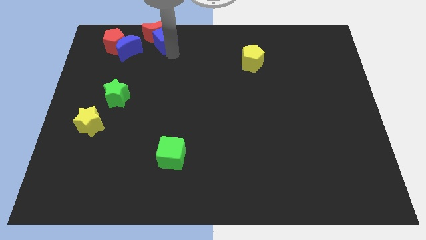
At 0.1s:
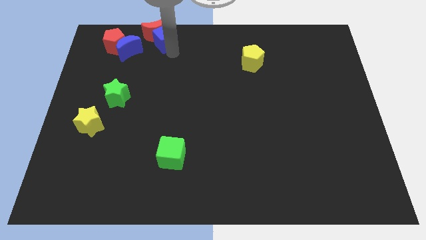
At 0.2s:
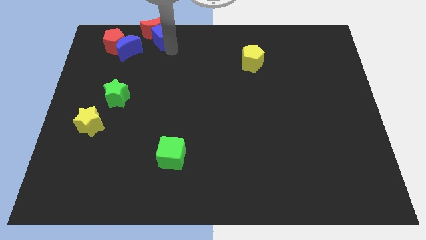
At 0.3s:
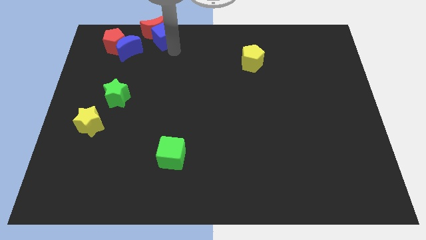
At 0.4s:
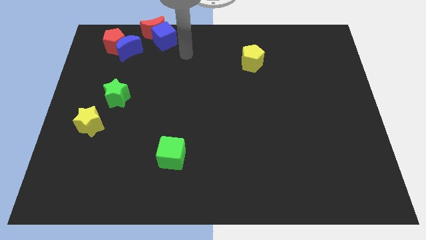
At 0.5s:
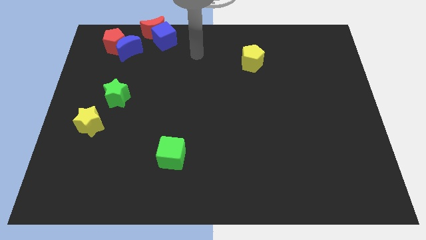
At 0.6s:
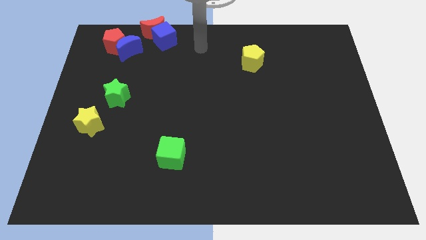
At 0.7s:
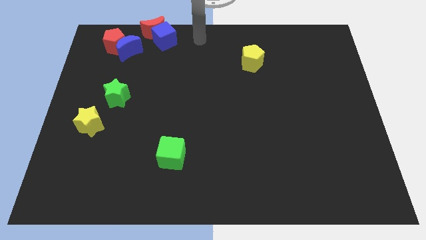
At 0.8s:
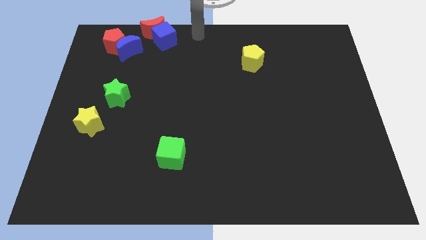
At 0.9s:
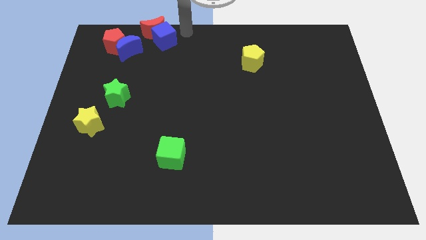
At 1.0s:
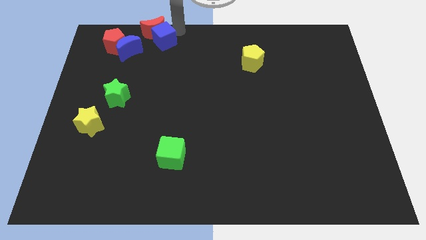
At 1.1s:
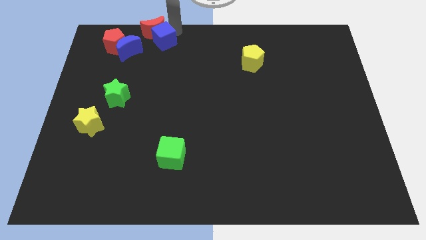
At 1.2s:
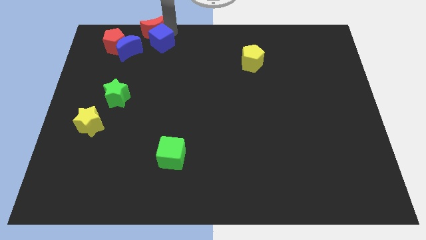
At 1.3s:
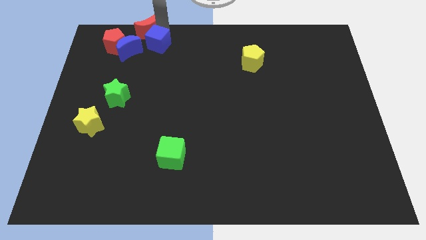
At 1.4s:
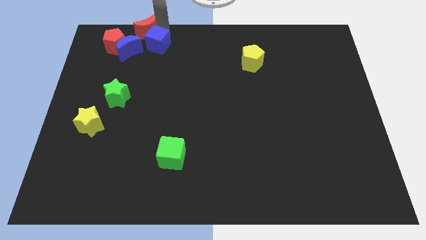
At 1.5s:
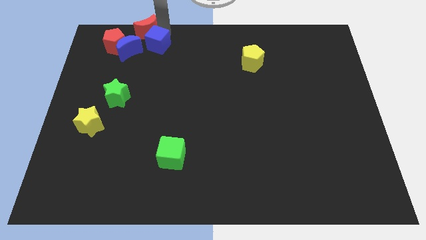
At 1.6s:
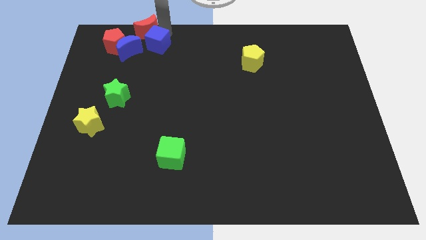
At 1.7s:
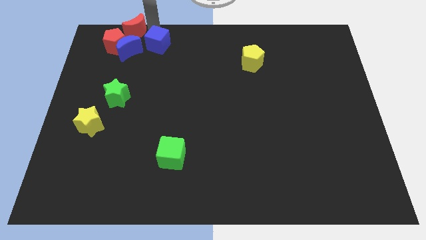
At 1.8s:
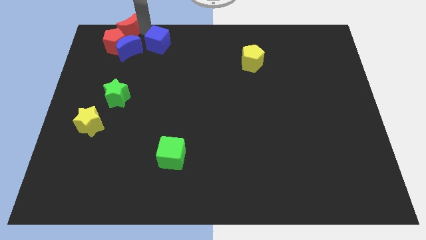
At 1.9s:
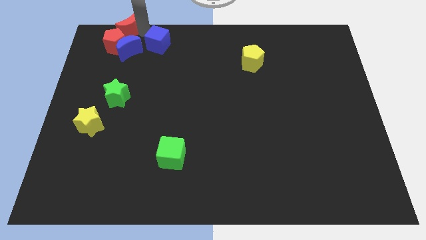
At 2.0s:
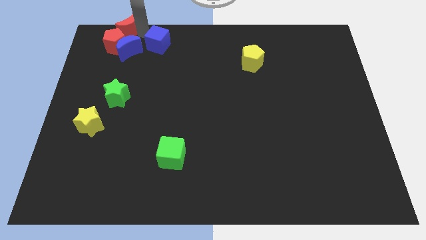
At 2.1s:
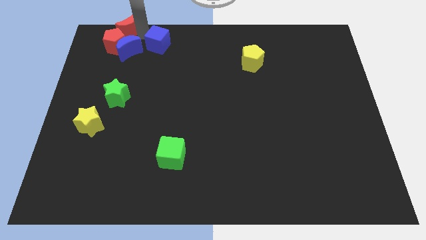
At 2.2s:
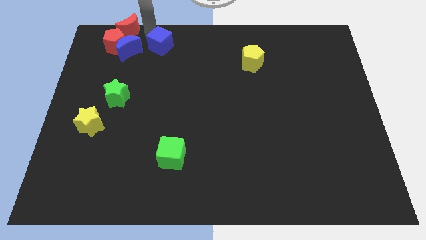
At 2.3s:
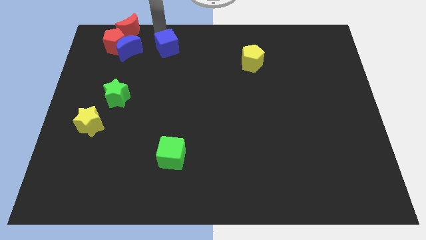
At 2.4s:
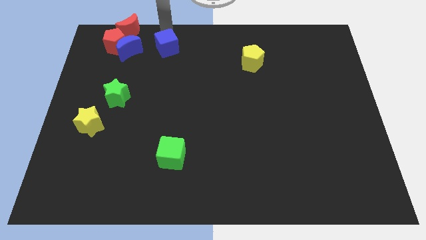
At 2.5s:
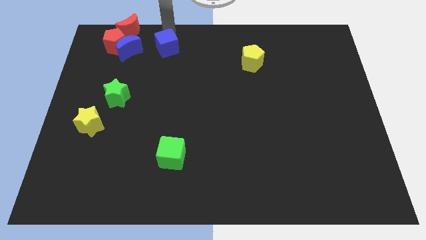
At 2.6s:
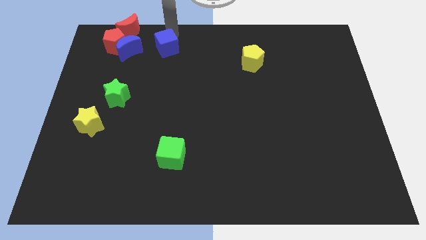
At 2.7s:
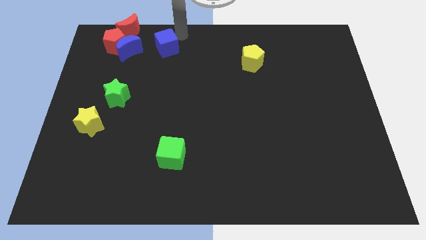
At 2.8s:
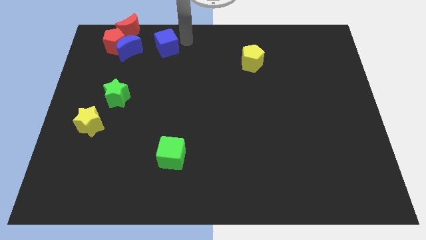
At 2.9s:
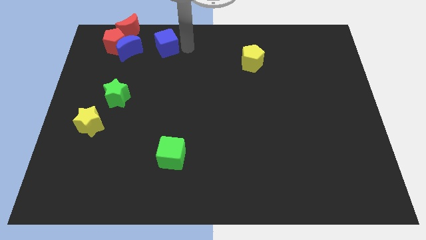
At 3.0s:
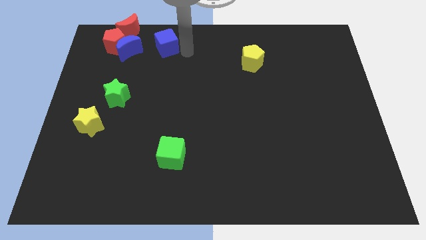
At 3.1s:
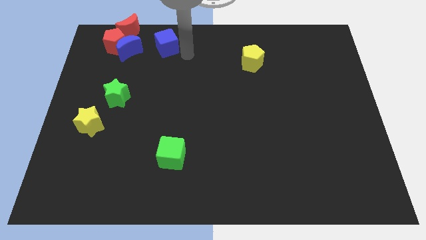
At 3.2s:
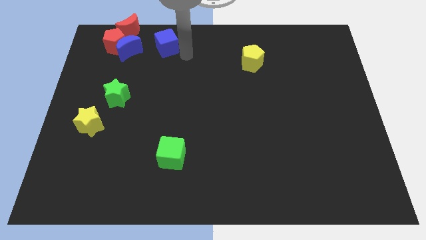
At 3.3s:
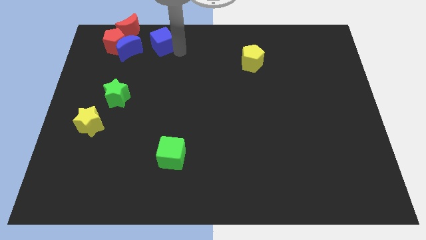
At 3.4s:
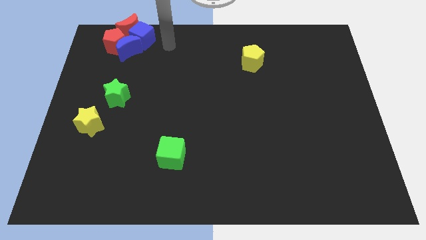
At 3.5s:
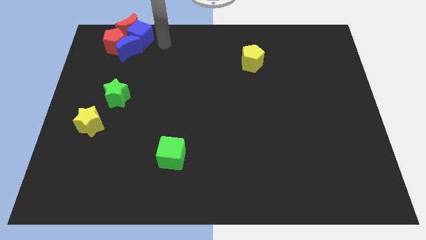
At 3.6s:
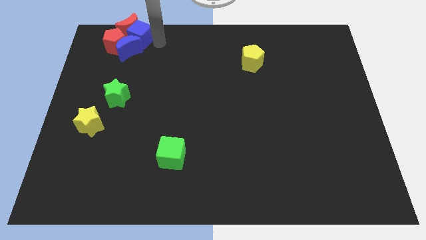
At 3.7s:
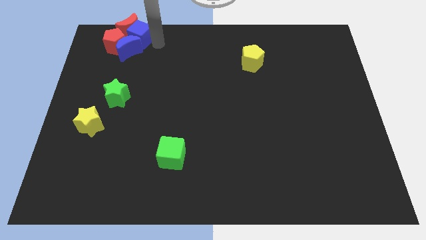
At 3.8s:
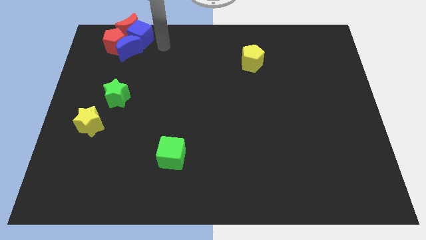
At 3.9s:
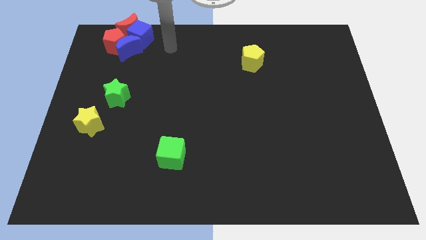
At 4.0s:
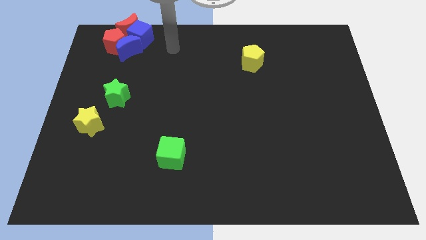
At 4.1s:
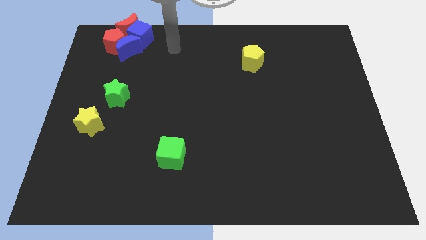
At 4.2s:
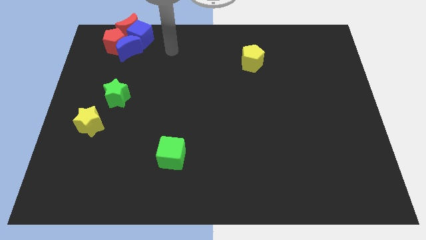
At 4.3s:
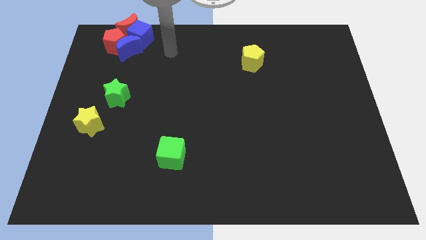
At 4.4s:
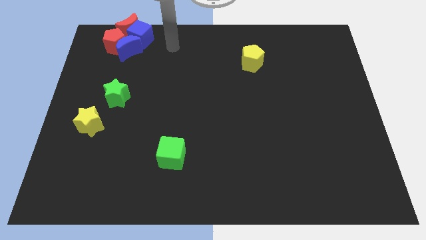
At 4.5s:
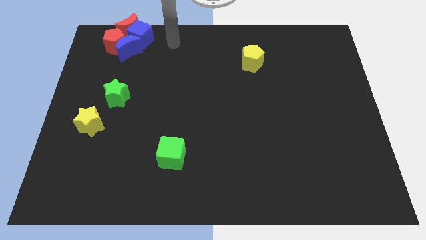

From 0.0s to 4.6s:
move the red moon and the blue cube towards the top left of the board

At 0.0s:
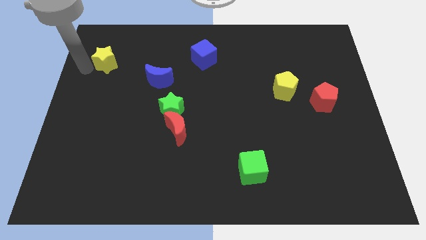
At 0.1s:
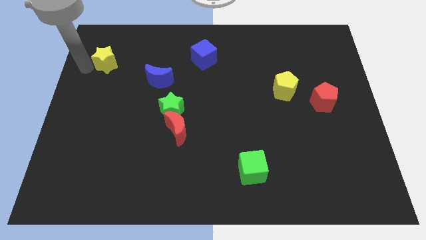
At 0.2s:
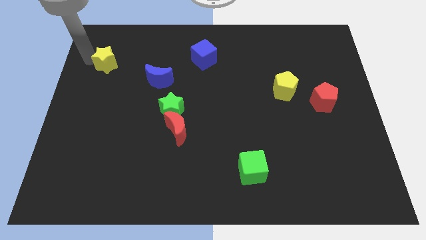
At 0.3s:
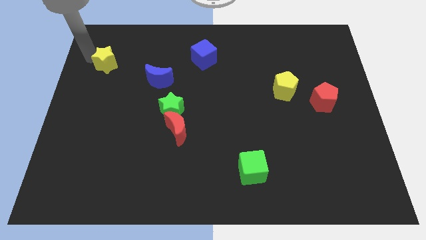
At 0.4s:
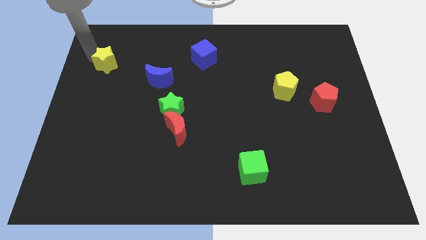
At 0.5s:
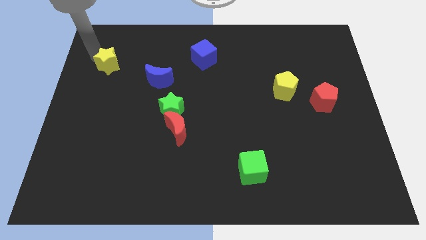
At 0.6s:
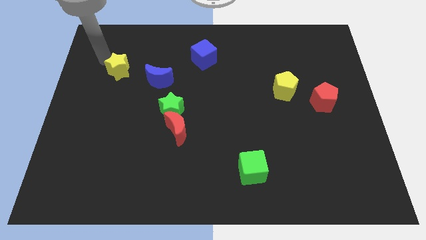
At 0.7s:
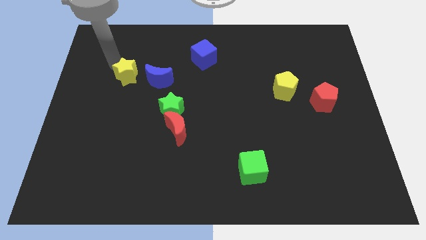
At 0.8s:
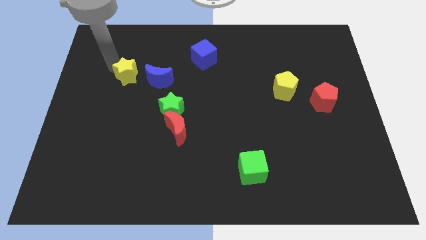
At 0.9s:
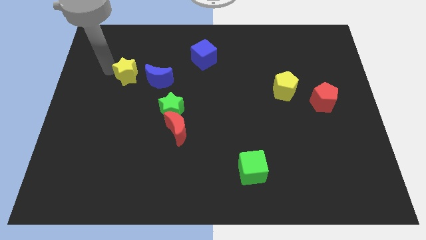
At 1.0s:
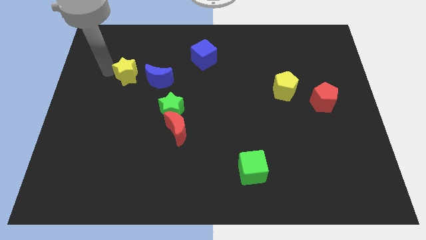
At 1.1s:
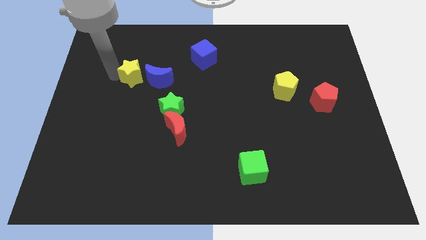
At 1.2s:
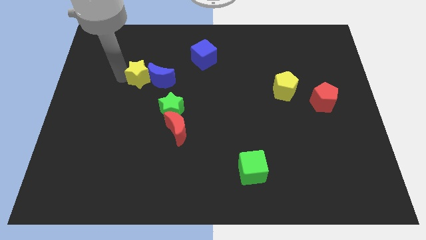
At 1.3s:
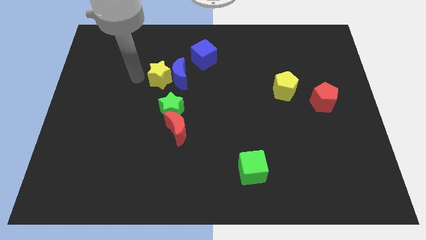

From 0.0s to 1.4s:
push the yellow star to the left side of the blue crescent

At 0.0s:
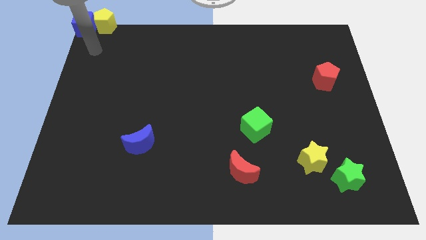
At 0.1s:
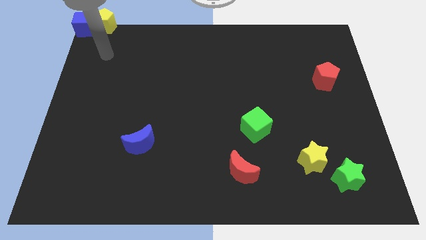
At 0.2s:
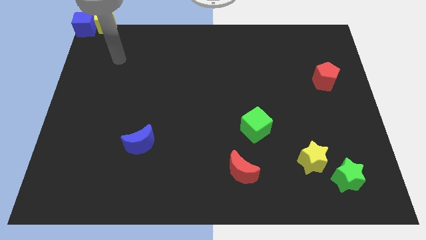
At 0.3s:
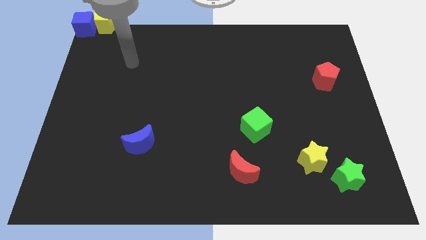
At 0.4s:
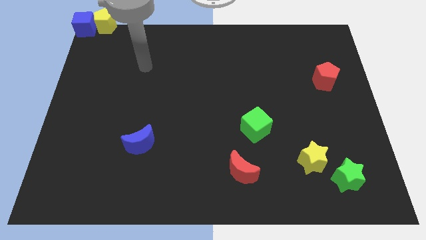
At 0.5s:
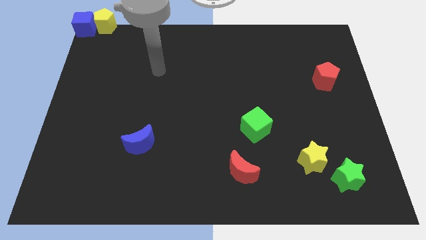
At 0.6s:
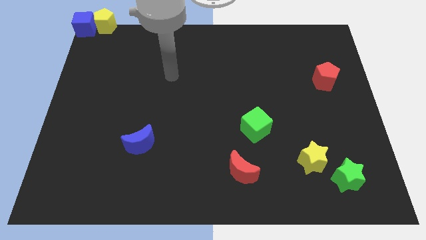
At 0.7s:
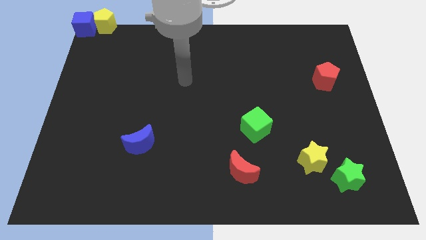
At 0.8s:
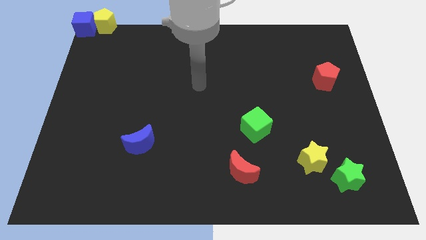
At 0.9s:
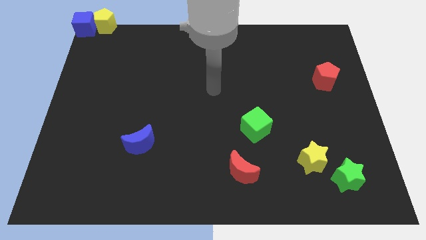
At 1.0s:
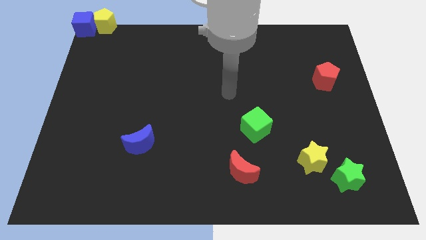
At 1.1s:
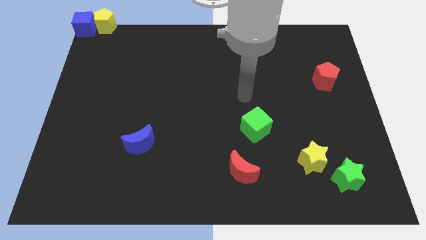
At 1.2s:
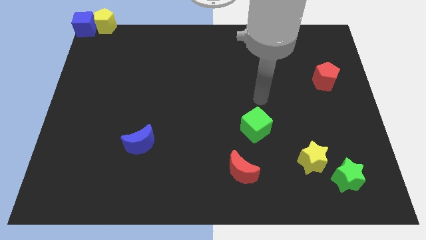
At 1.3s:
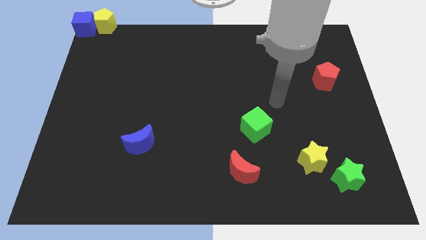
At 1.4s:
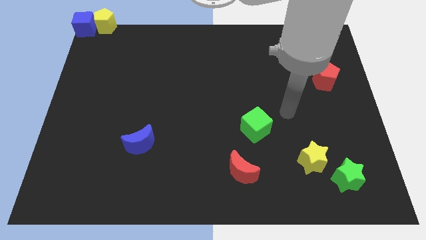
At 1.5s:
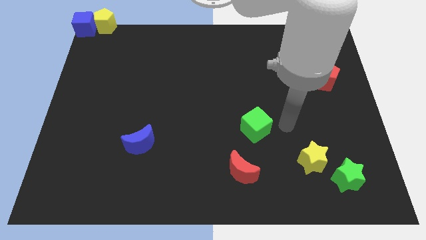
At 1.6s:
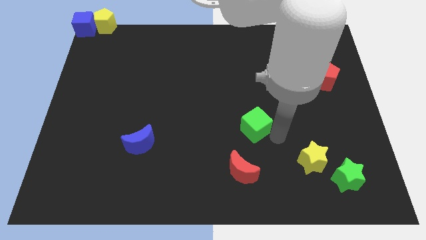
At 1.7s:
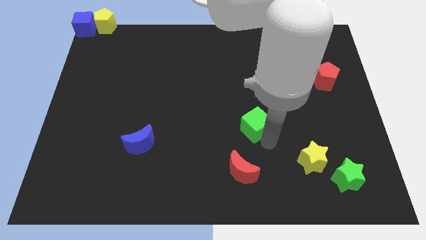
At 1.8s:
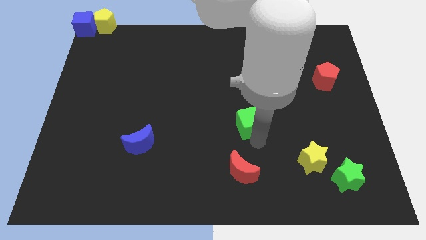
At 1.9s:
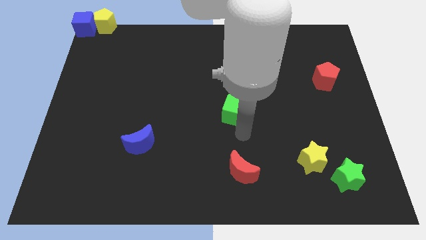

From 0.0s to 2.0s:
tap the bottom side of the green cube

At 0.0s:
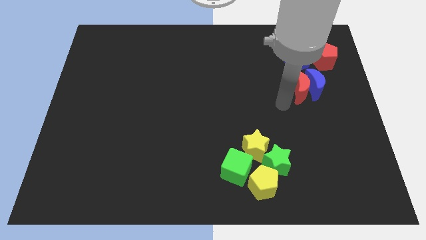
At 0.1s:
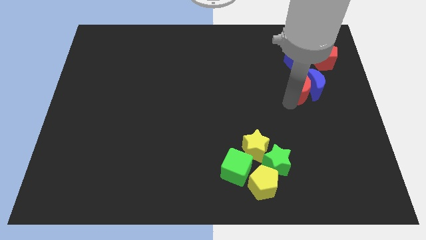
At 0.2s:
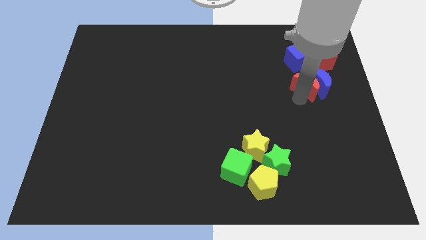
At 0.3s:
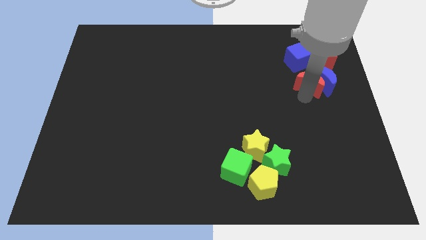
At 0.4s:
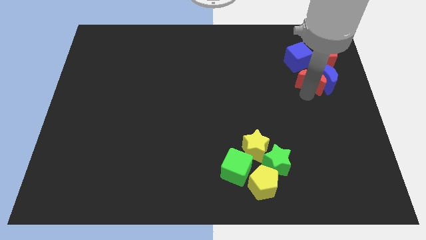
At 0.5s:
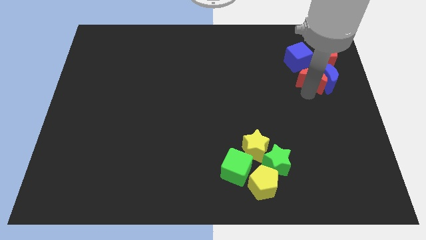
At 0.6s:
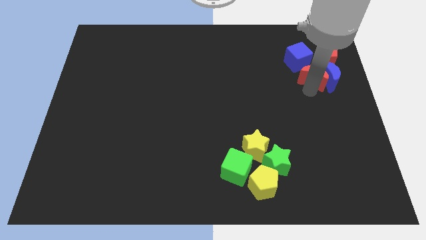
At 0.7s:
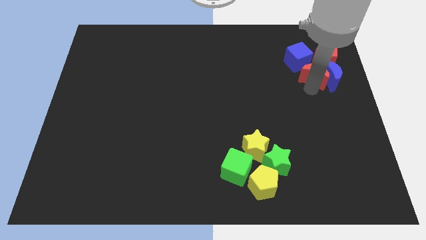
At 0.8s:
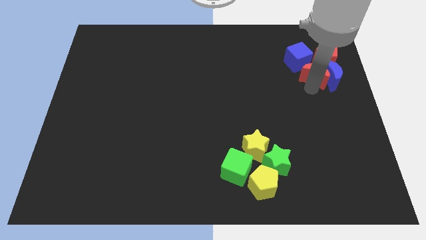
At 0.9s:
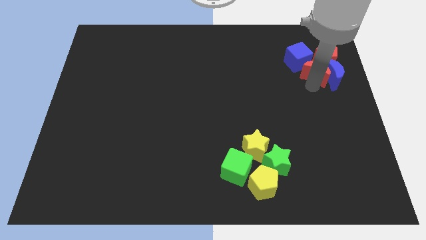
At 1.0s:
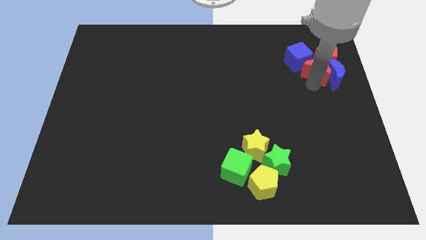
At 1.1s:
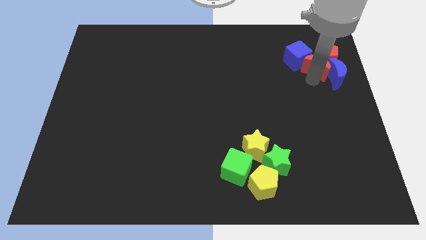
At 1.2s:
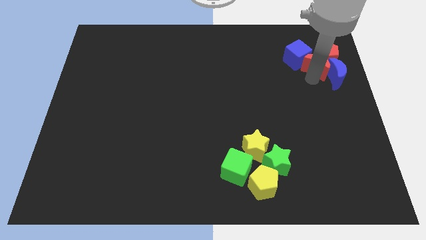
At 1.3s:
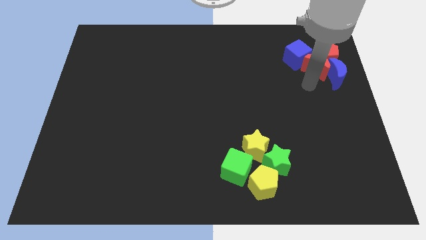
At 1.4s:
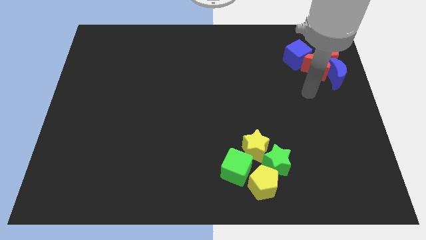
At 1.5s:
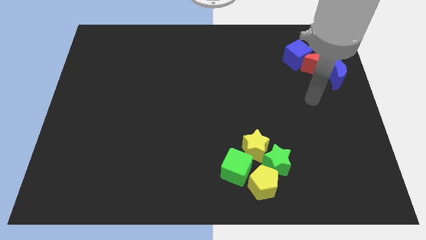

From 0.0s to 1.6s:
drag red moon along with the blue moon towards the top right
